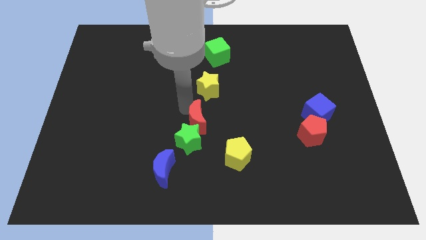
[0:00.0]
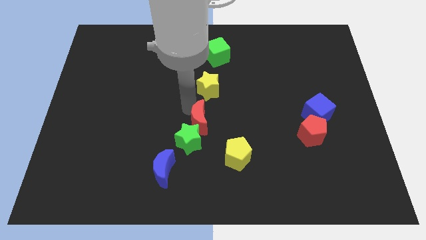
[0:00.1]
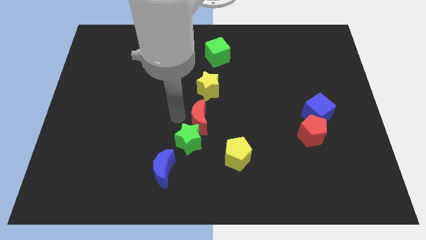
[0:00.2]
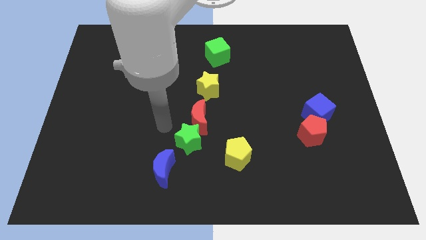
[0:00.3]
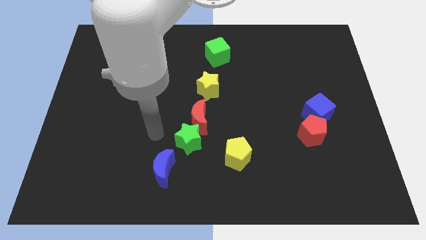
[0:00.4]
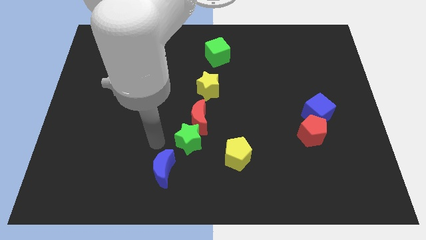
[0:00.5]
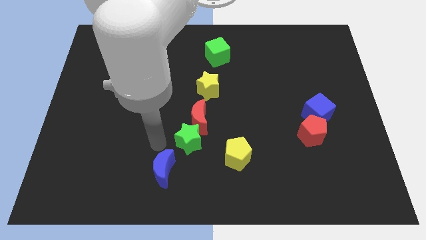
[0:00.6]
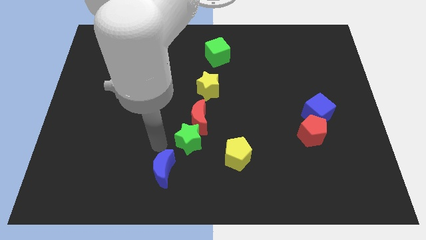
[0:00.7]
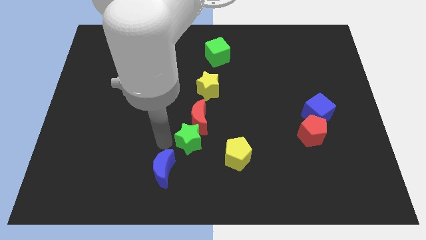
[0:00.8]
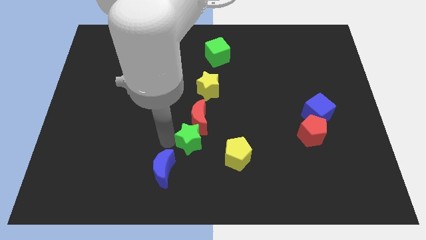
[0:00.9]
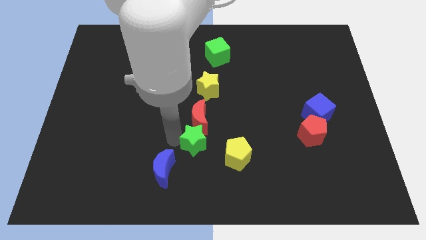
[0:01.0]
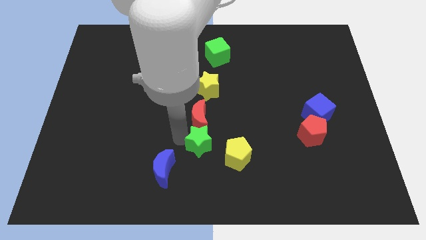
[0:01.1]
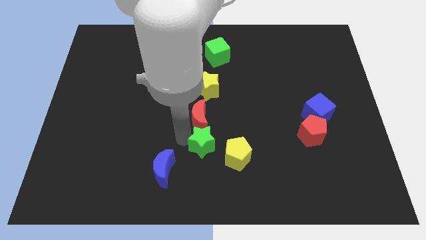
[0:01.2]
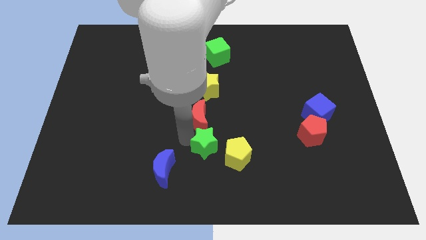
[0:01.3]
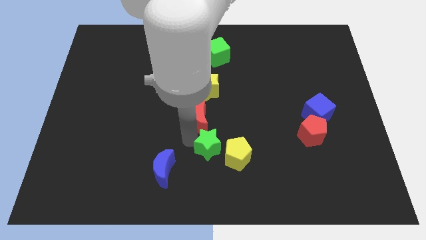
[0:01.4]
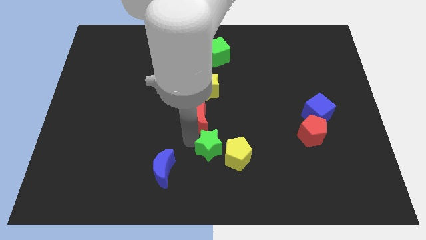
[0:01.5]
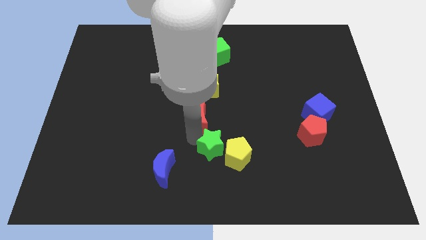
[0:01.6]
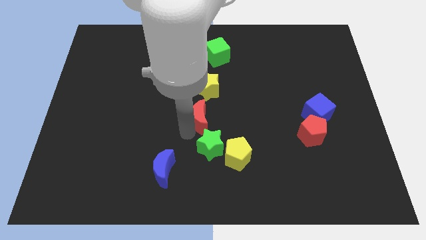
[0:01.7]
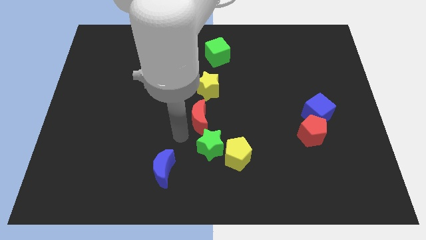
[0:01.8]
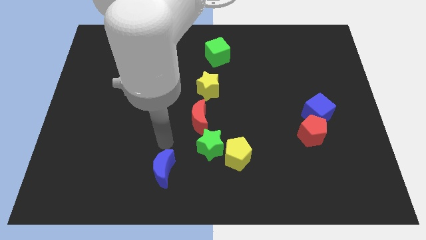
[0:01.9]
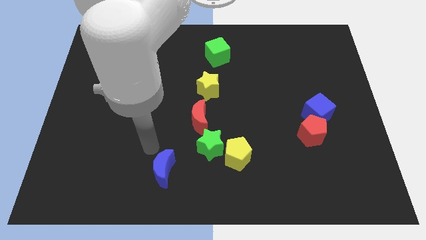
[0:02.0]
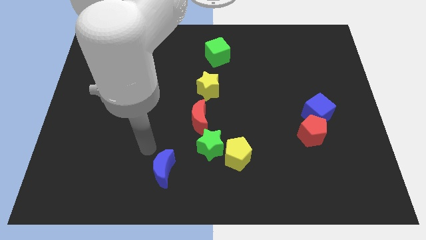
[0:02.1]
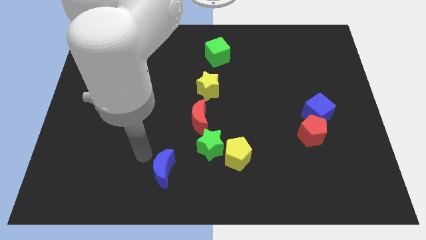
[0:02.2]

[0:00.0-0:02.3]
move the green star to the left of the yellow pentagon

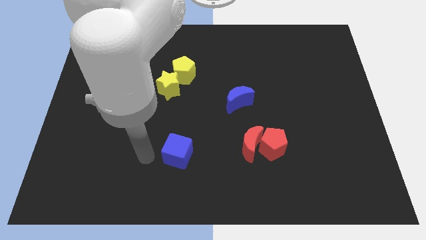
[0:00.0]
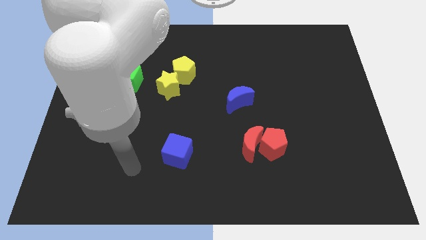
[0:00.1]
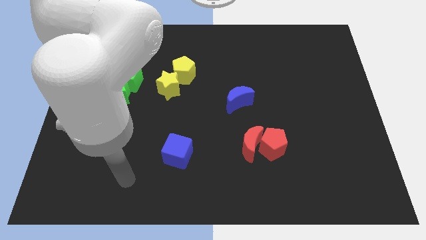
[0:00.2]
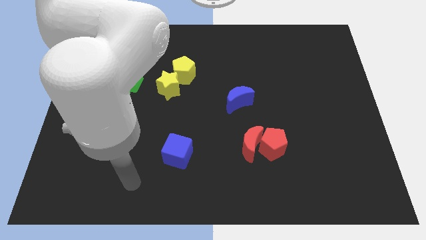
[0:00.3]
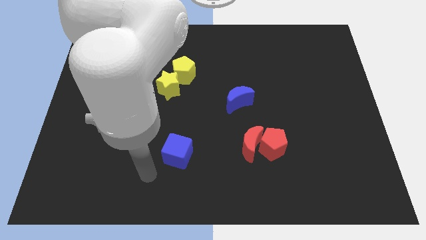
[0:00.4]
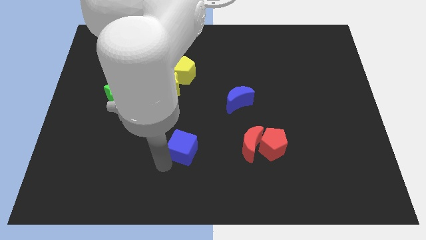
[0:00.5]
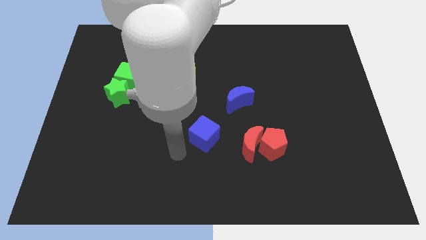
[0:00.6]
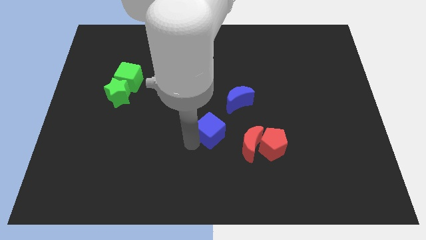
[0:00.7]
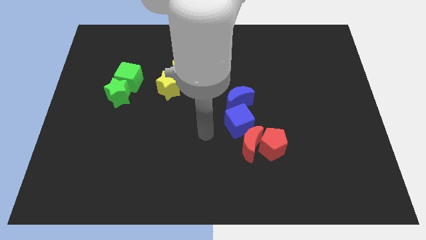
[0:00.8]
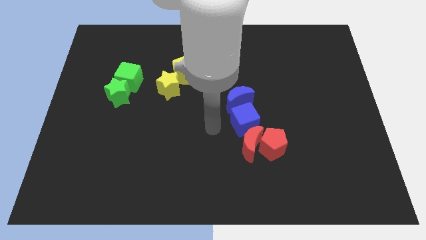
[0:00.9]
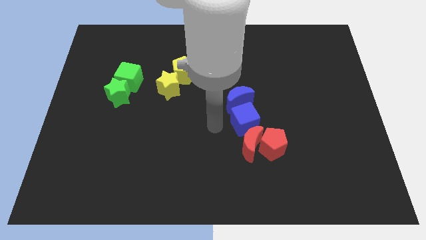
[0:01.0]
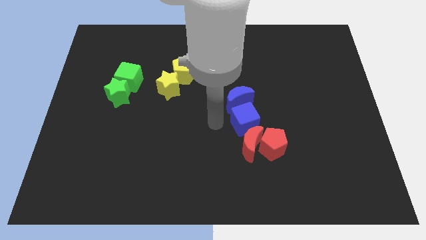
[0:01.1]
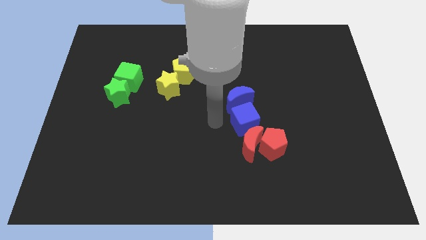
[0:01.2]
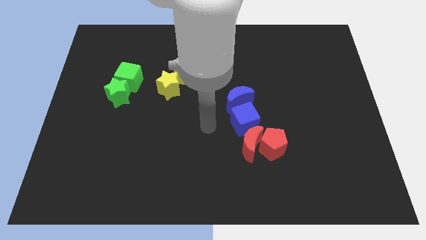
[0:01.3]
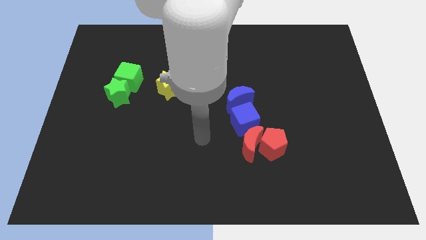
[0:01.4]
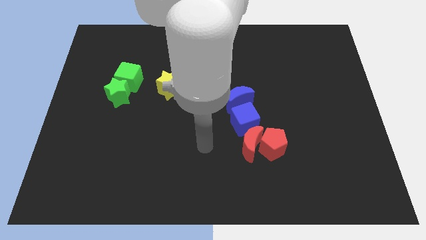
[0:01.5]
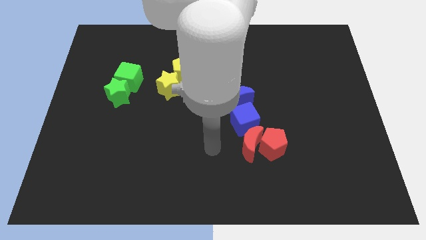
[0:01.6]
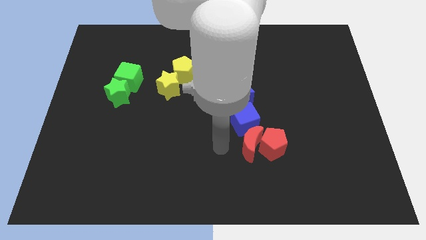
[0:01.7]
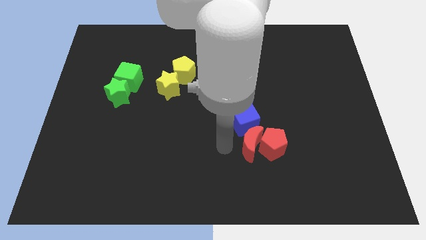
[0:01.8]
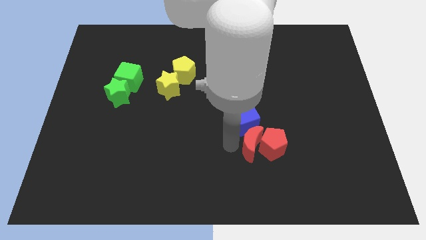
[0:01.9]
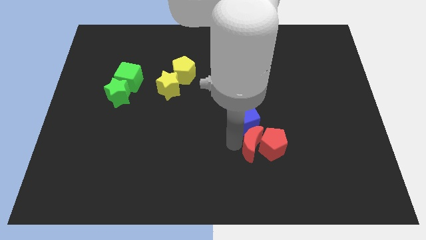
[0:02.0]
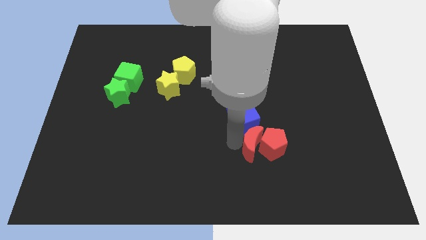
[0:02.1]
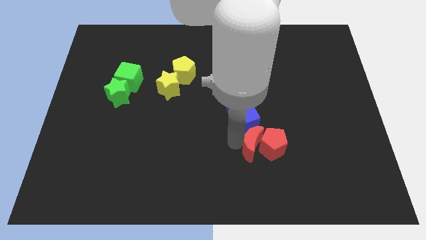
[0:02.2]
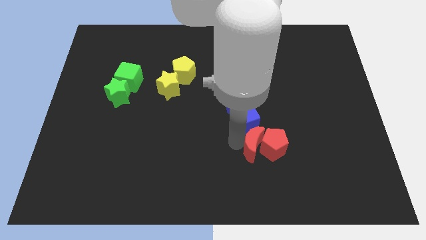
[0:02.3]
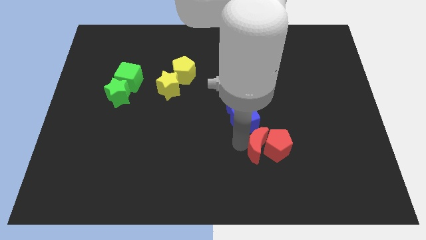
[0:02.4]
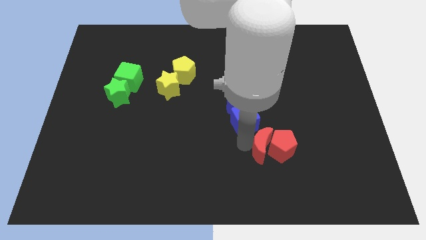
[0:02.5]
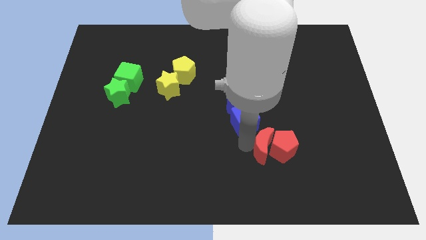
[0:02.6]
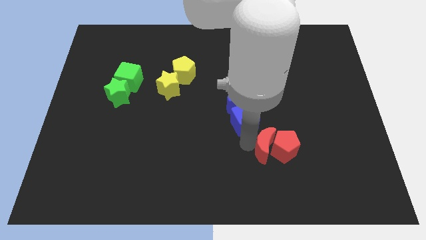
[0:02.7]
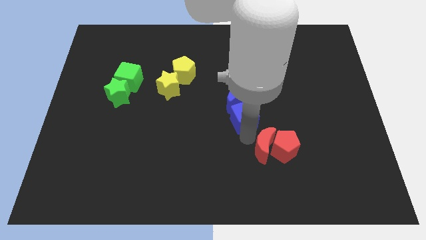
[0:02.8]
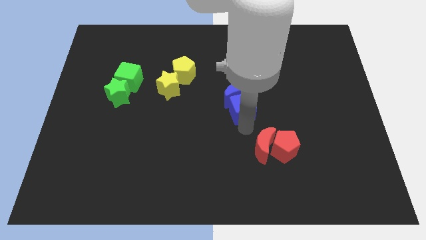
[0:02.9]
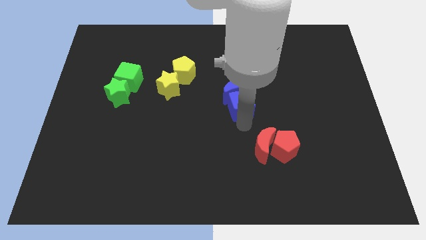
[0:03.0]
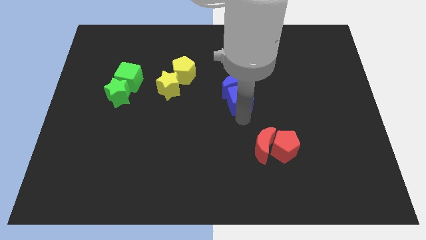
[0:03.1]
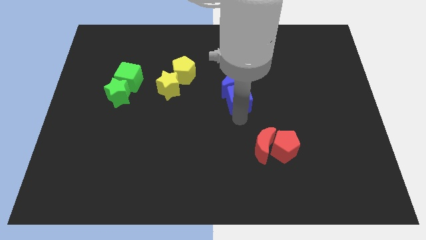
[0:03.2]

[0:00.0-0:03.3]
push the blue cube in between the blue moon and red moon

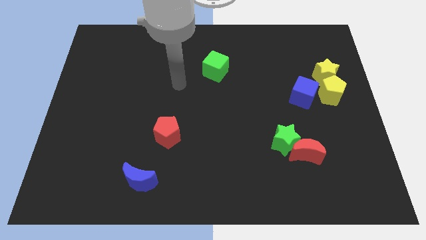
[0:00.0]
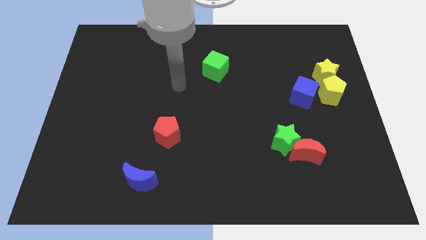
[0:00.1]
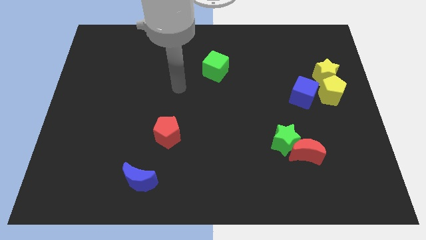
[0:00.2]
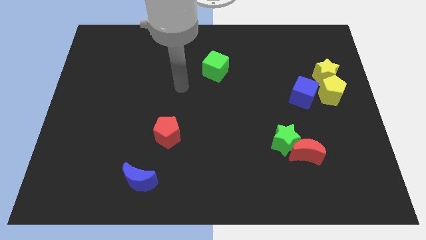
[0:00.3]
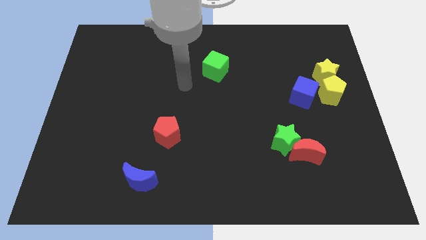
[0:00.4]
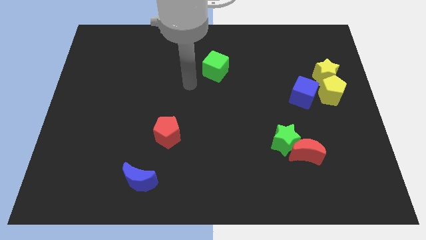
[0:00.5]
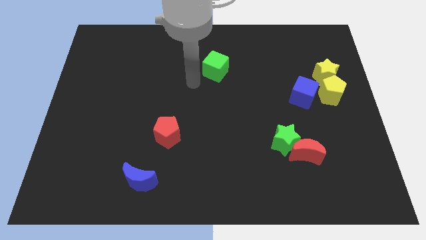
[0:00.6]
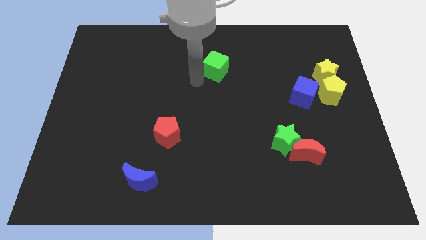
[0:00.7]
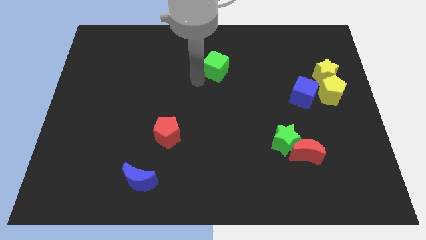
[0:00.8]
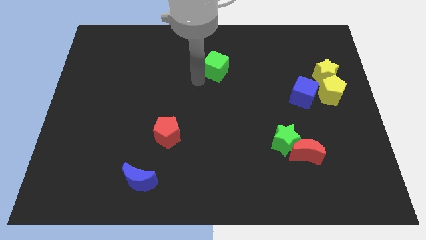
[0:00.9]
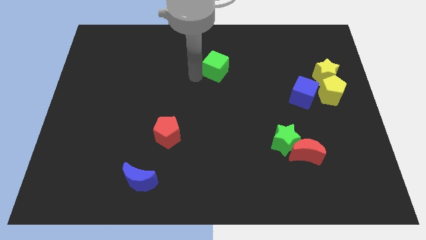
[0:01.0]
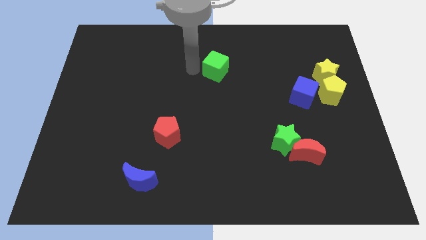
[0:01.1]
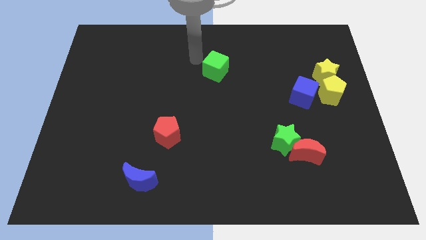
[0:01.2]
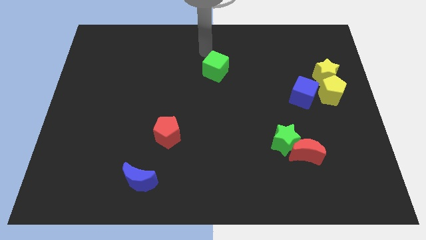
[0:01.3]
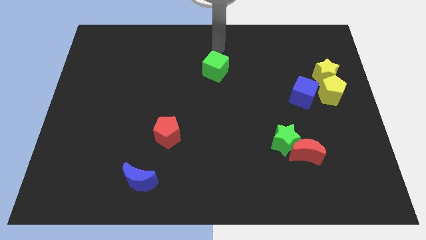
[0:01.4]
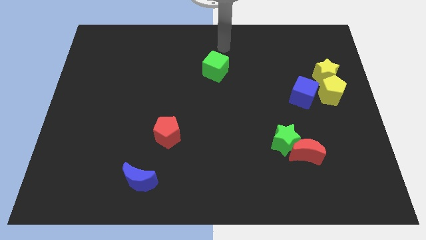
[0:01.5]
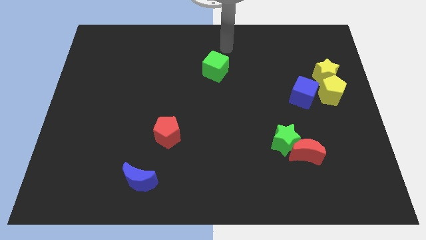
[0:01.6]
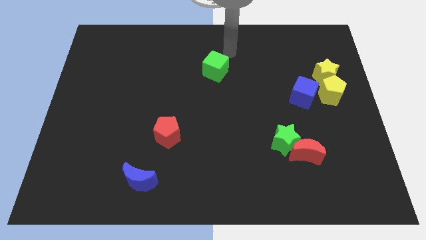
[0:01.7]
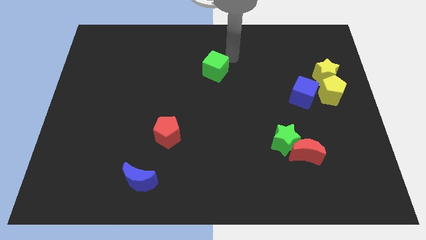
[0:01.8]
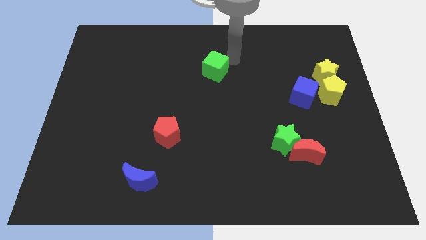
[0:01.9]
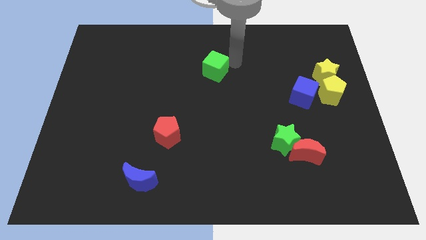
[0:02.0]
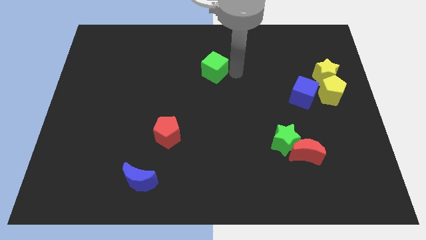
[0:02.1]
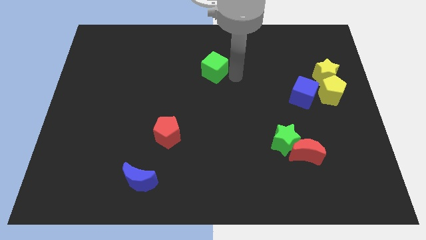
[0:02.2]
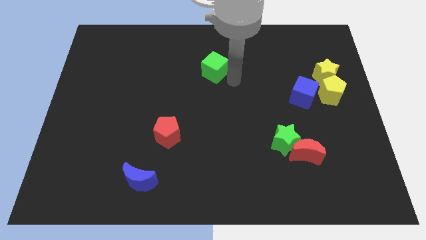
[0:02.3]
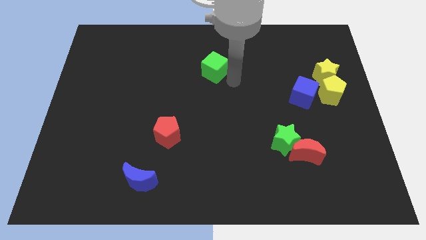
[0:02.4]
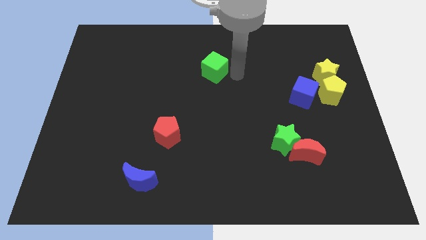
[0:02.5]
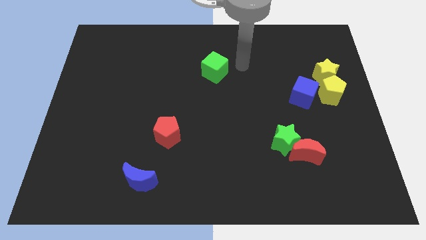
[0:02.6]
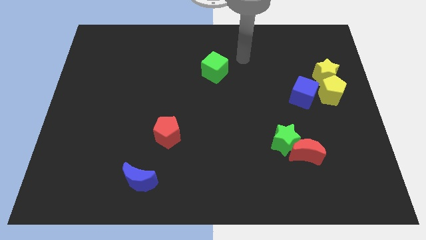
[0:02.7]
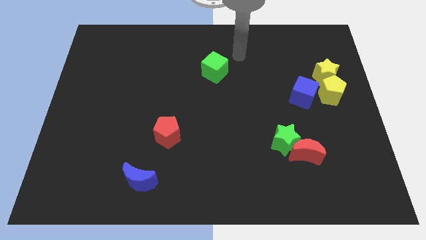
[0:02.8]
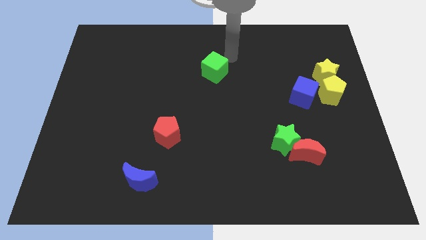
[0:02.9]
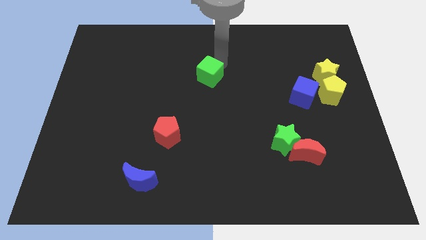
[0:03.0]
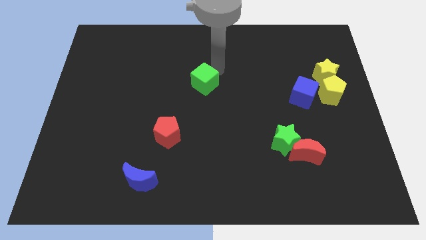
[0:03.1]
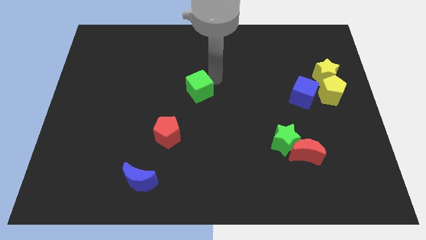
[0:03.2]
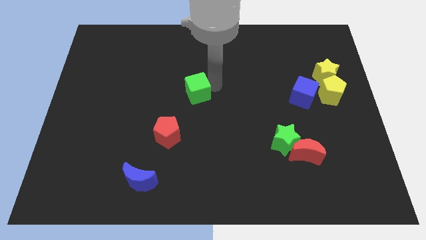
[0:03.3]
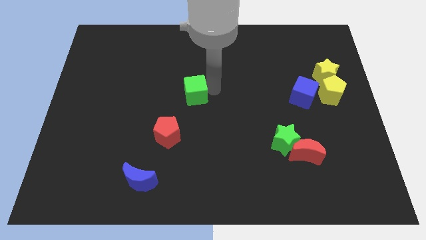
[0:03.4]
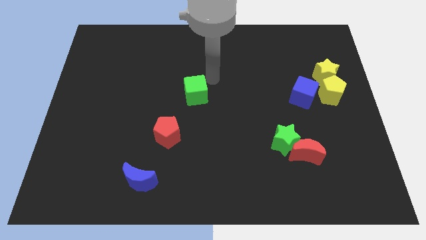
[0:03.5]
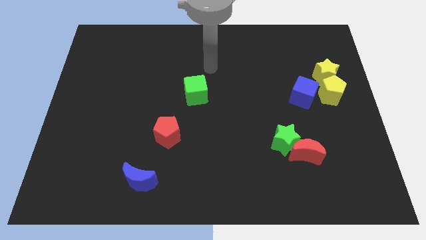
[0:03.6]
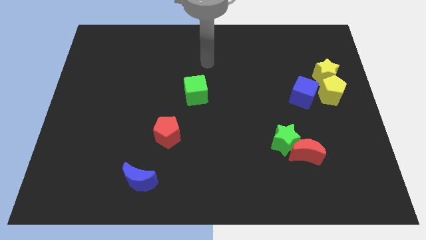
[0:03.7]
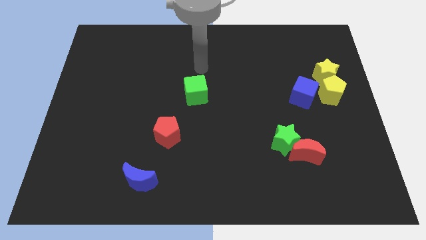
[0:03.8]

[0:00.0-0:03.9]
put the green cube diagonally on the top right side of the red pentagon
